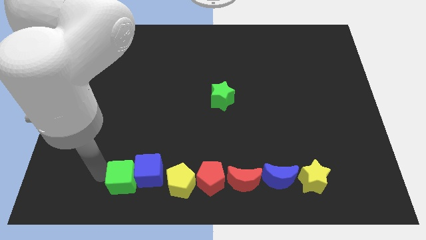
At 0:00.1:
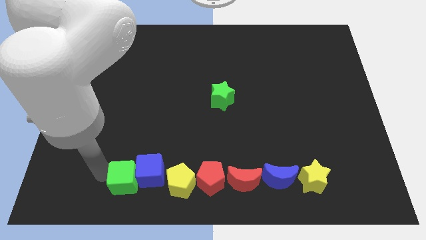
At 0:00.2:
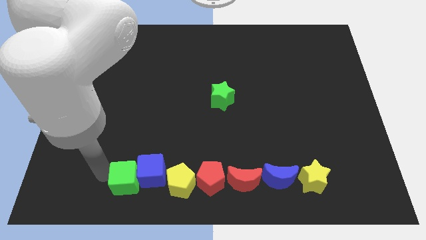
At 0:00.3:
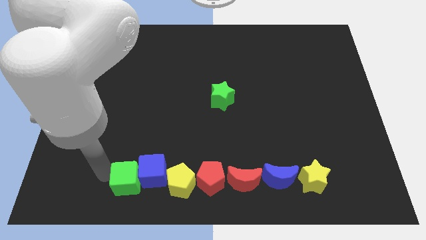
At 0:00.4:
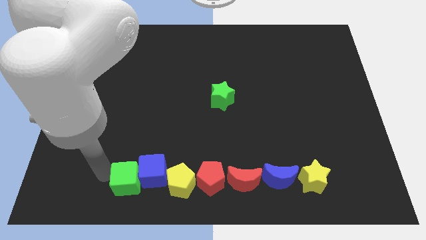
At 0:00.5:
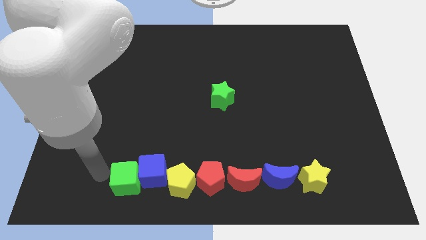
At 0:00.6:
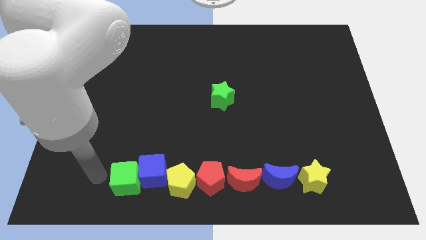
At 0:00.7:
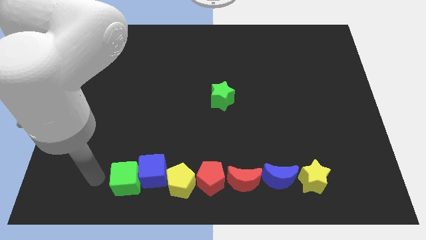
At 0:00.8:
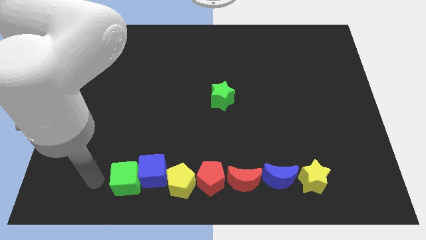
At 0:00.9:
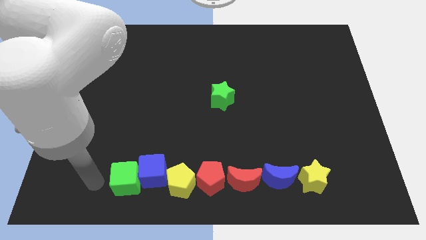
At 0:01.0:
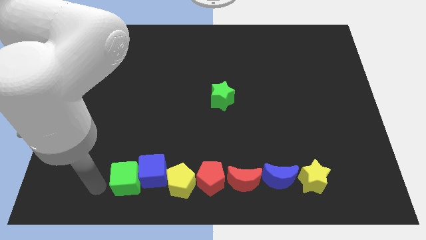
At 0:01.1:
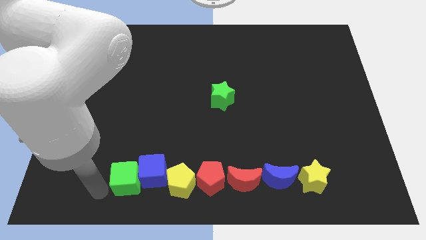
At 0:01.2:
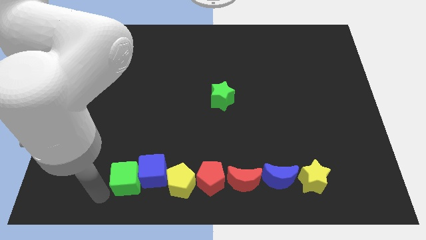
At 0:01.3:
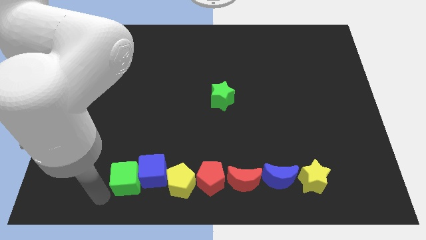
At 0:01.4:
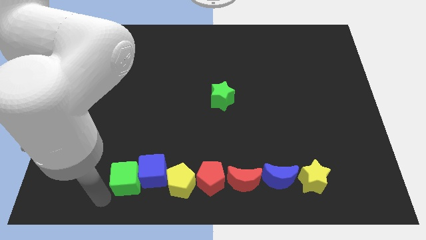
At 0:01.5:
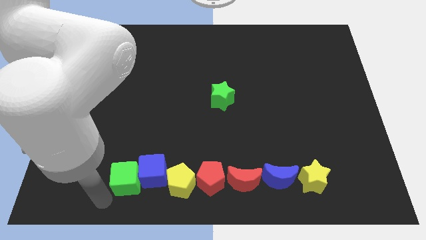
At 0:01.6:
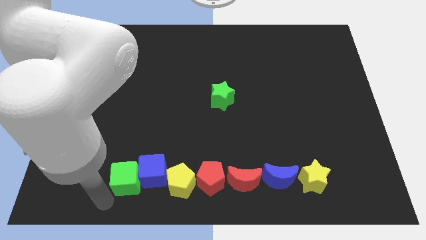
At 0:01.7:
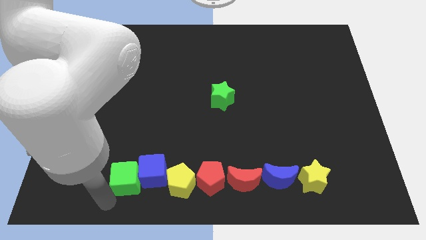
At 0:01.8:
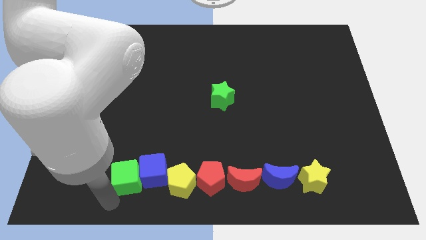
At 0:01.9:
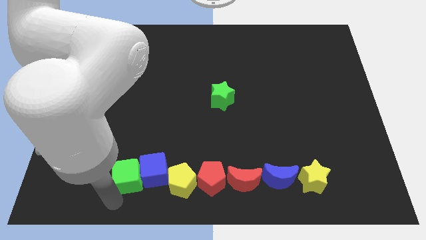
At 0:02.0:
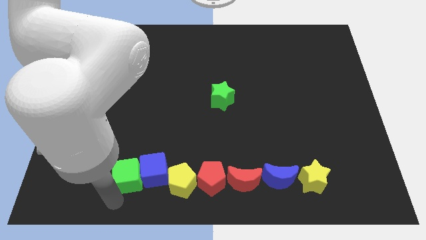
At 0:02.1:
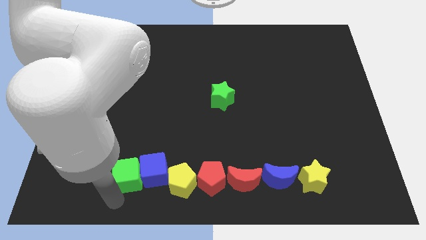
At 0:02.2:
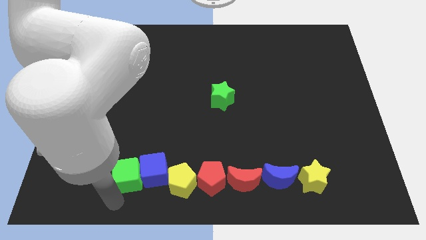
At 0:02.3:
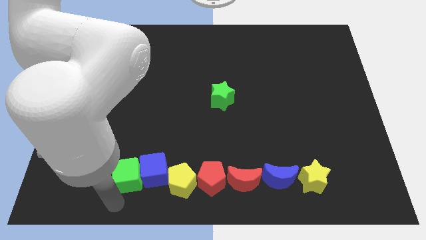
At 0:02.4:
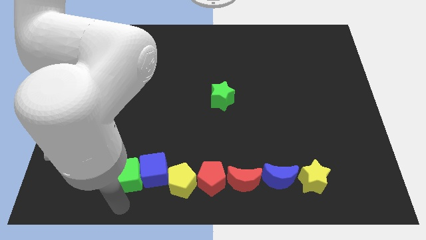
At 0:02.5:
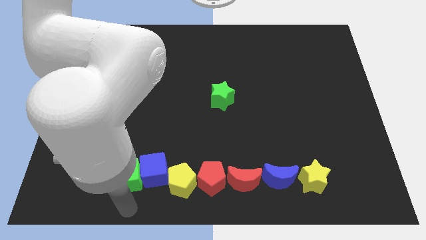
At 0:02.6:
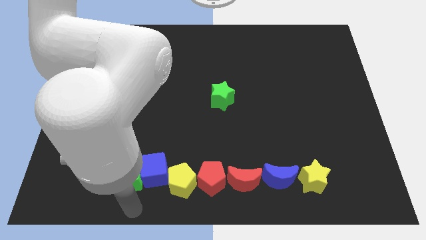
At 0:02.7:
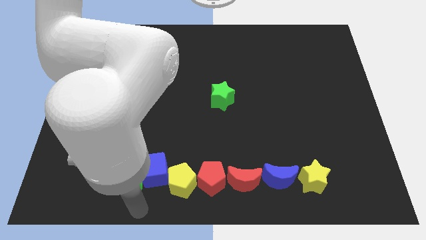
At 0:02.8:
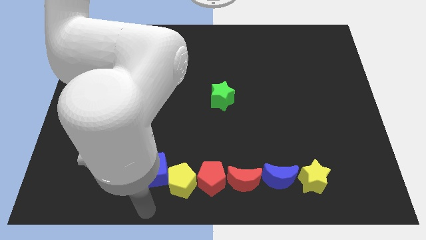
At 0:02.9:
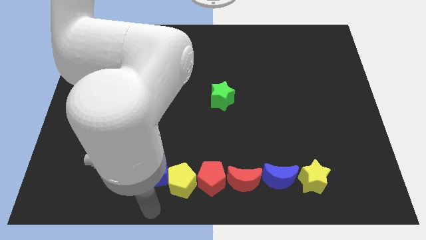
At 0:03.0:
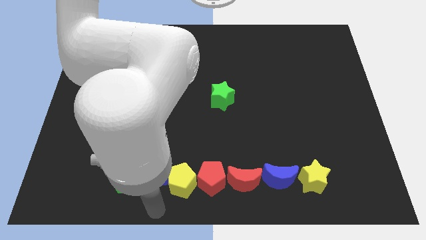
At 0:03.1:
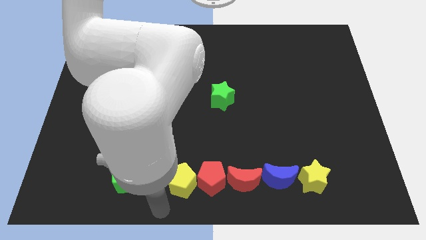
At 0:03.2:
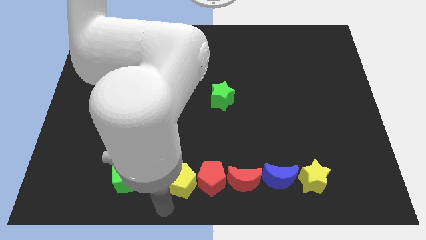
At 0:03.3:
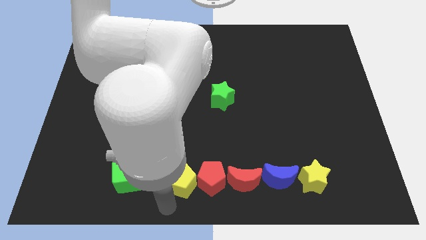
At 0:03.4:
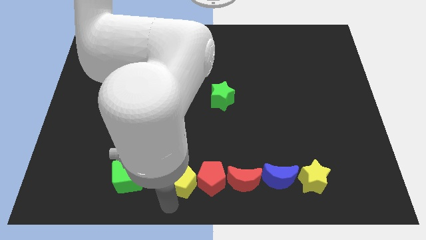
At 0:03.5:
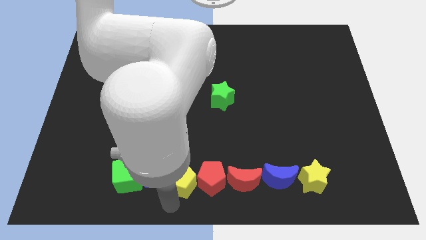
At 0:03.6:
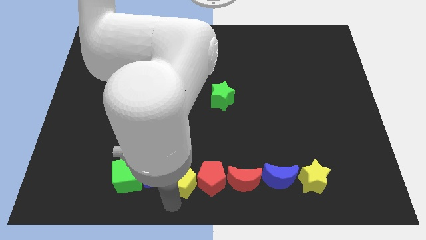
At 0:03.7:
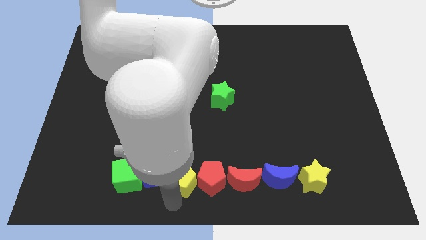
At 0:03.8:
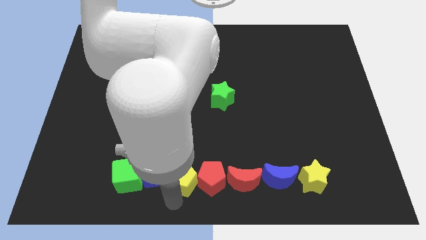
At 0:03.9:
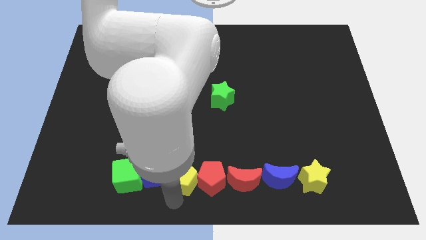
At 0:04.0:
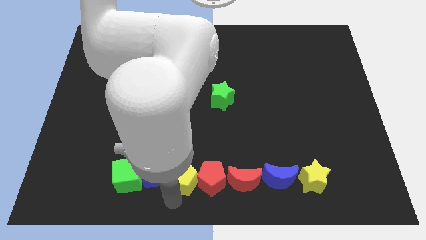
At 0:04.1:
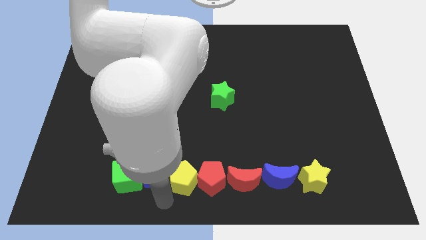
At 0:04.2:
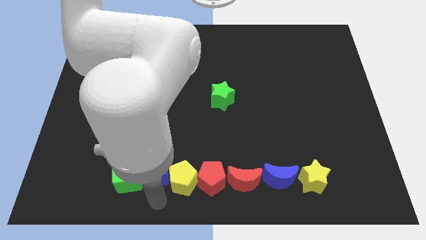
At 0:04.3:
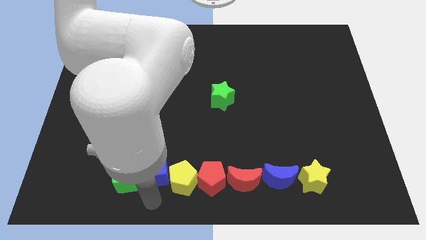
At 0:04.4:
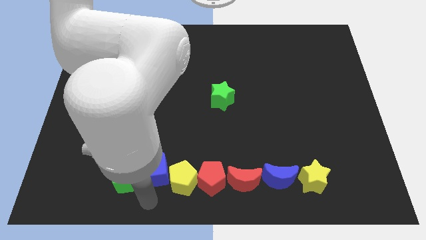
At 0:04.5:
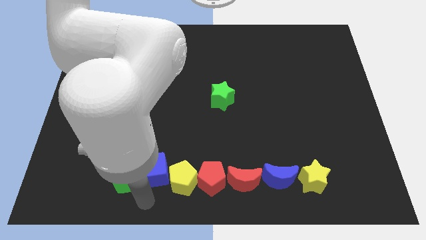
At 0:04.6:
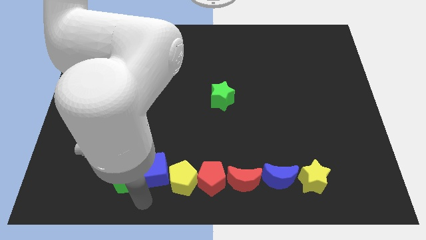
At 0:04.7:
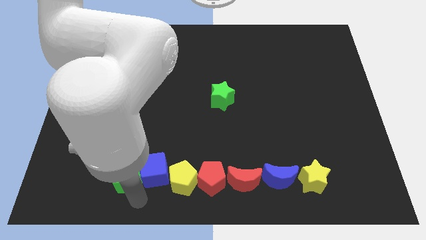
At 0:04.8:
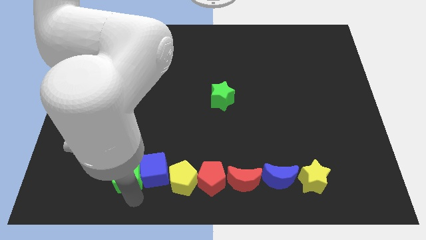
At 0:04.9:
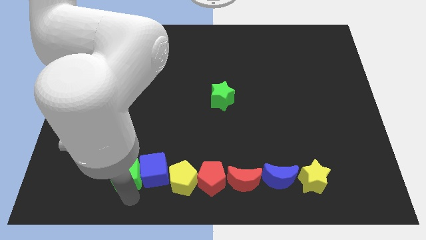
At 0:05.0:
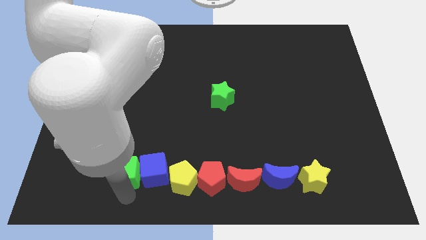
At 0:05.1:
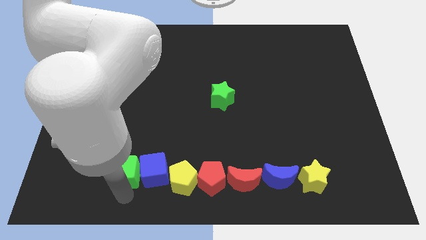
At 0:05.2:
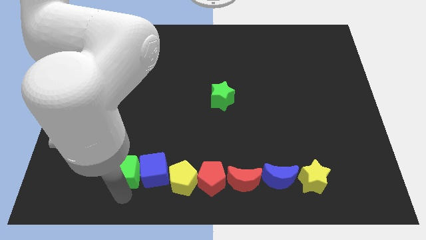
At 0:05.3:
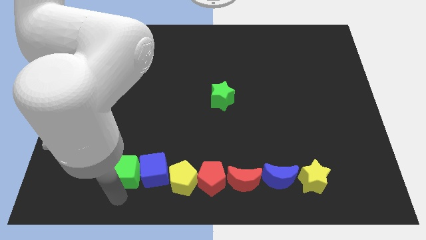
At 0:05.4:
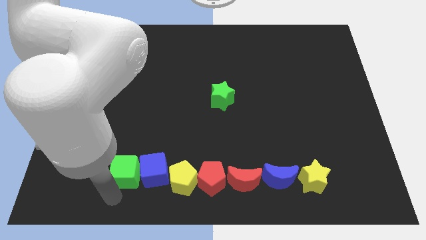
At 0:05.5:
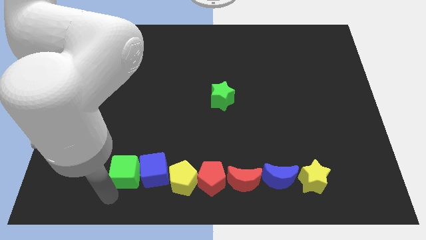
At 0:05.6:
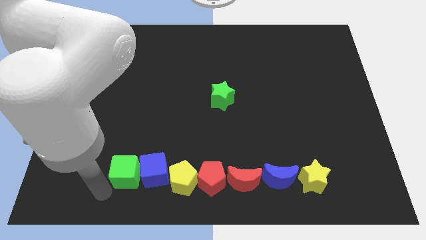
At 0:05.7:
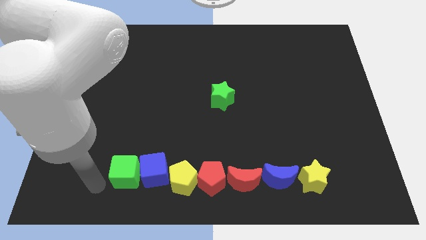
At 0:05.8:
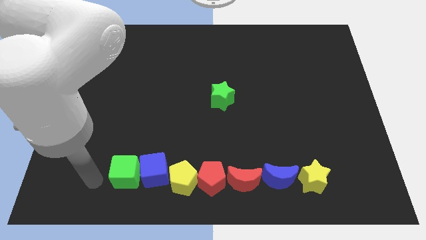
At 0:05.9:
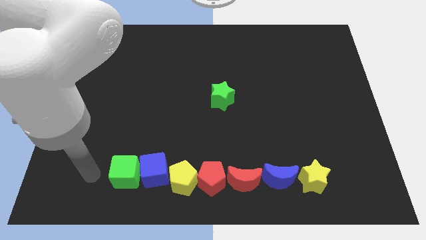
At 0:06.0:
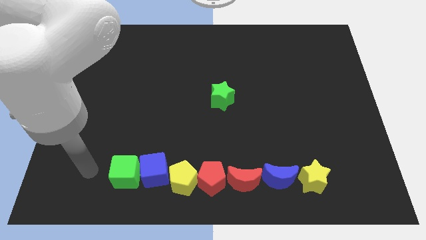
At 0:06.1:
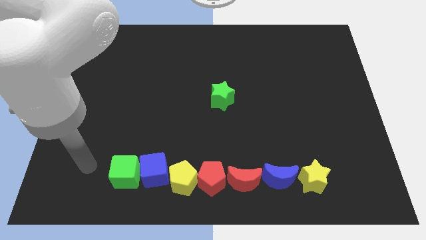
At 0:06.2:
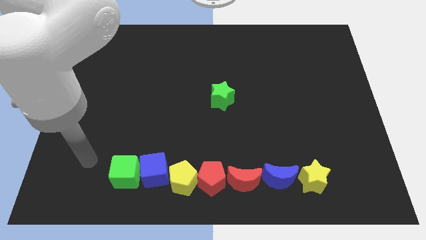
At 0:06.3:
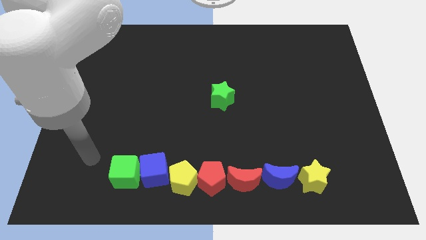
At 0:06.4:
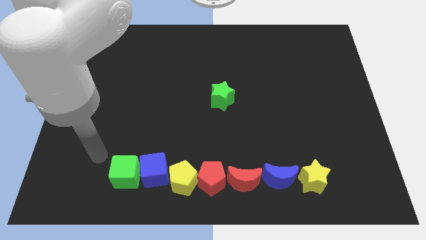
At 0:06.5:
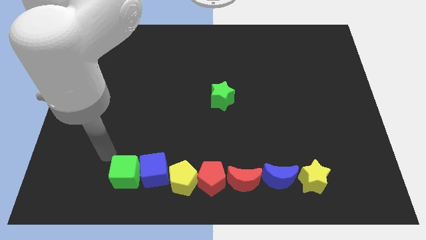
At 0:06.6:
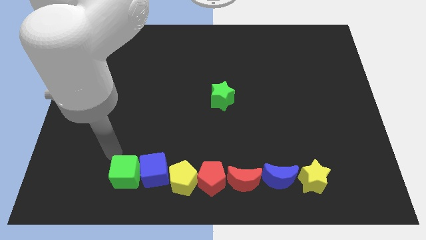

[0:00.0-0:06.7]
adjust the green cube and the yellow pentagon to form a horizontal line

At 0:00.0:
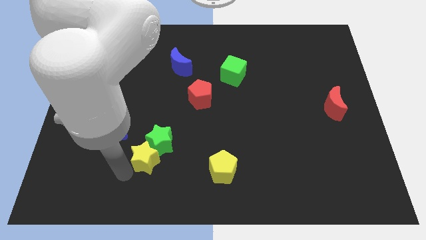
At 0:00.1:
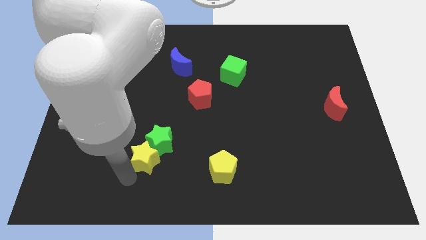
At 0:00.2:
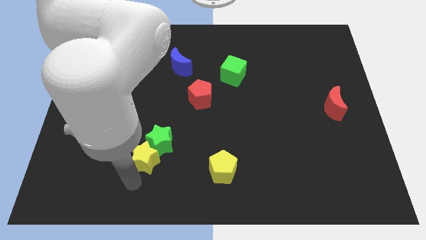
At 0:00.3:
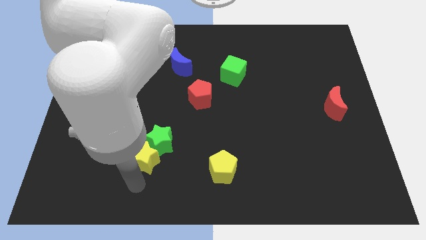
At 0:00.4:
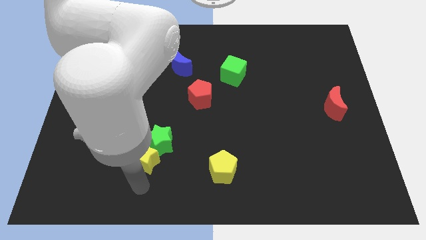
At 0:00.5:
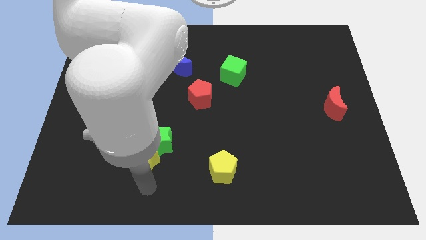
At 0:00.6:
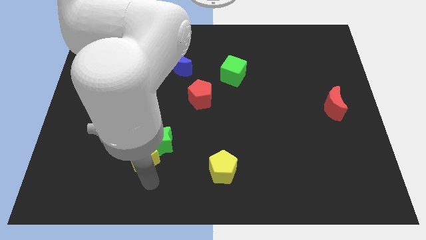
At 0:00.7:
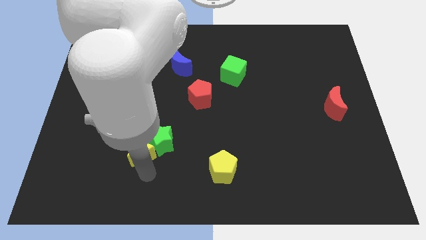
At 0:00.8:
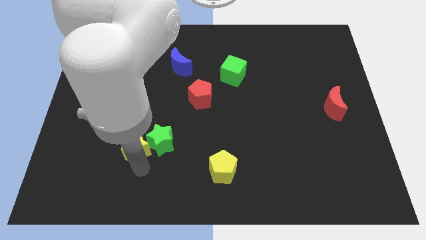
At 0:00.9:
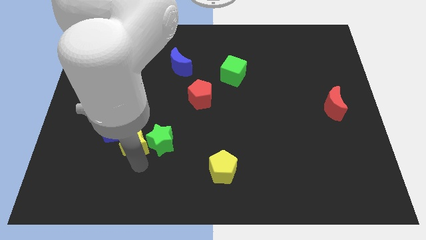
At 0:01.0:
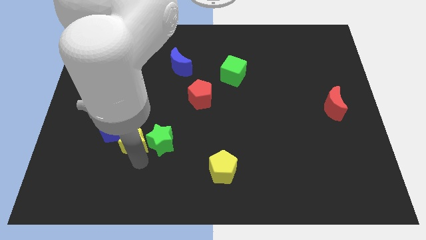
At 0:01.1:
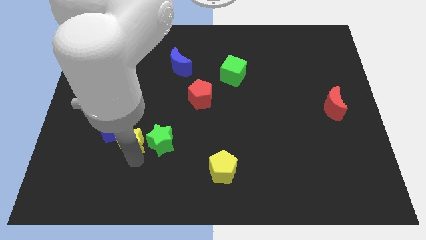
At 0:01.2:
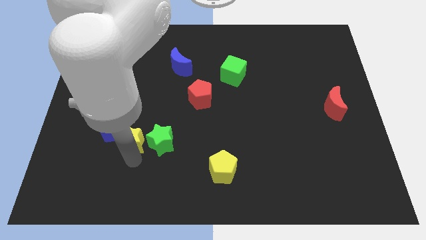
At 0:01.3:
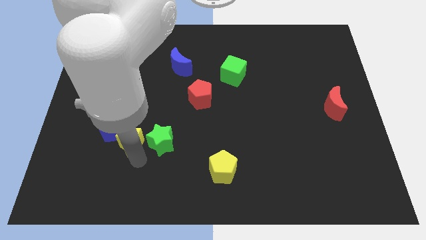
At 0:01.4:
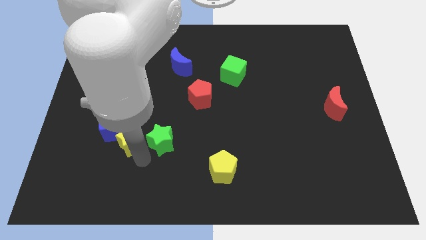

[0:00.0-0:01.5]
move the yellow star to the bottom right of the blue cube

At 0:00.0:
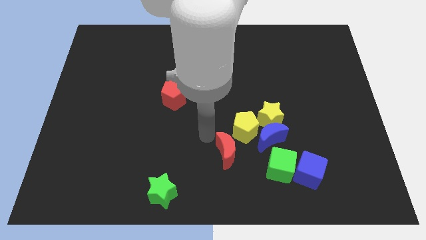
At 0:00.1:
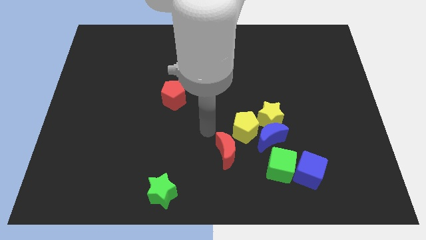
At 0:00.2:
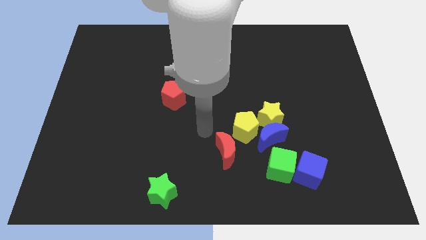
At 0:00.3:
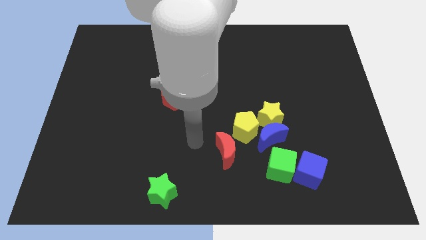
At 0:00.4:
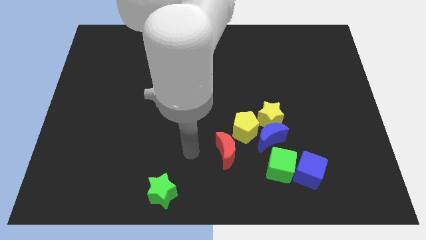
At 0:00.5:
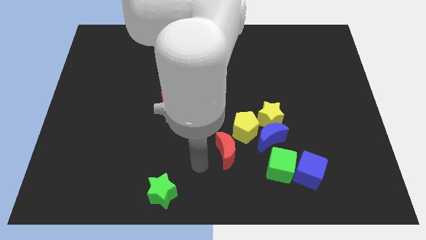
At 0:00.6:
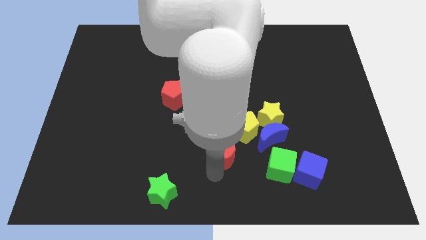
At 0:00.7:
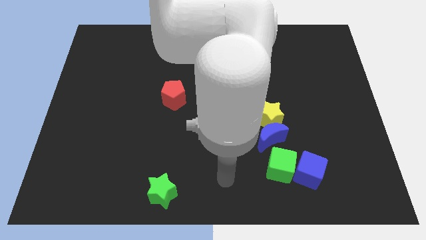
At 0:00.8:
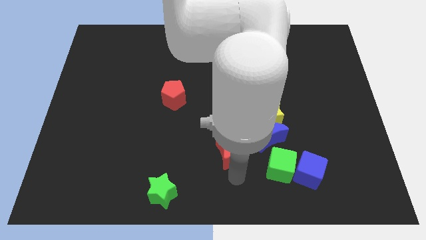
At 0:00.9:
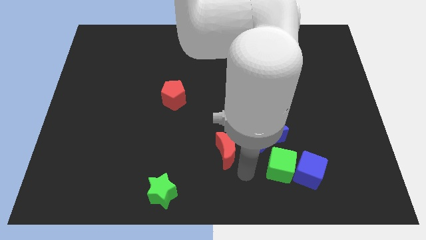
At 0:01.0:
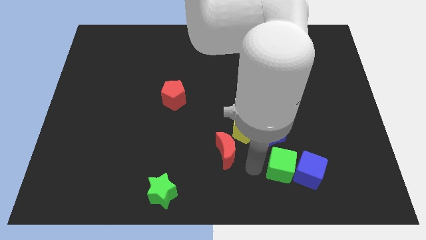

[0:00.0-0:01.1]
slide your arm in between green cube and red moon
